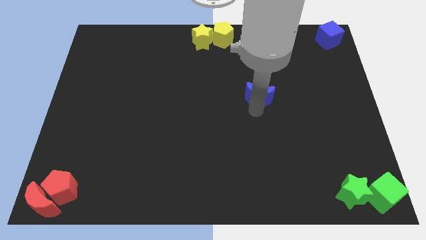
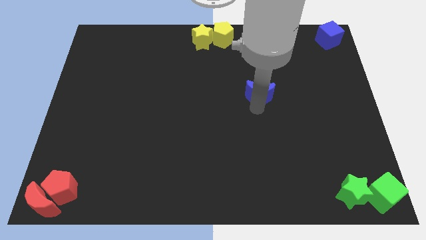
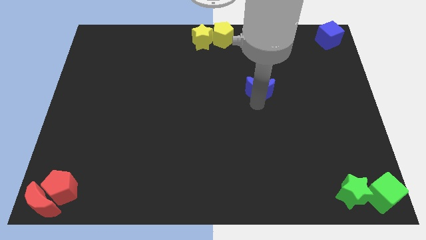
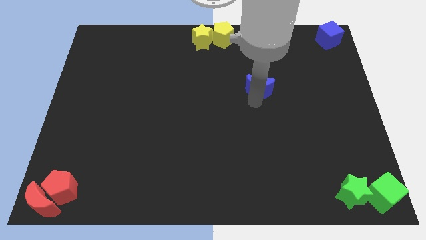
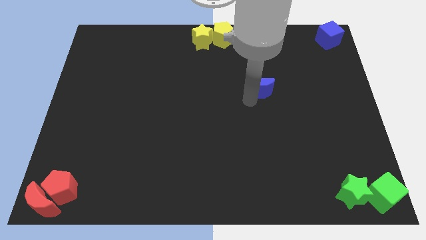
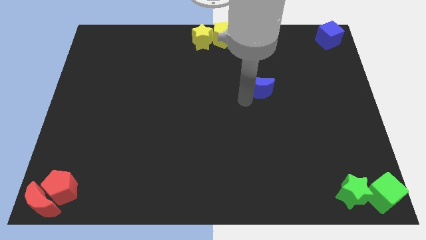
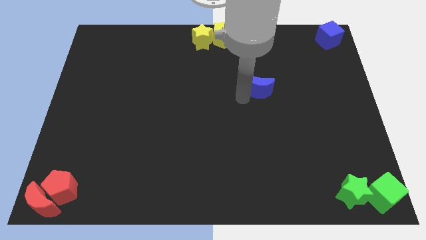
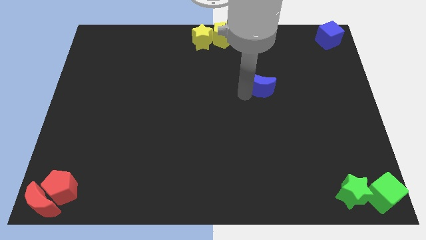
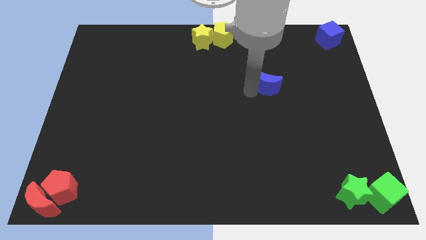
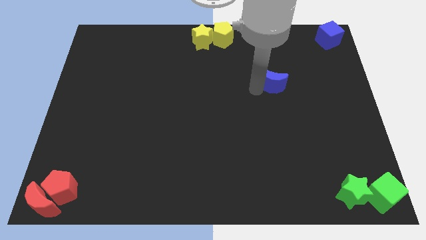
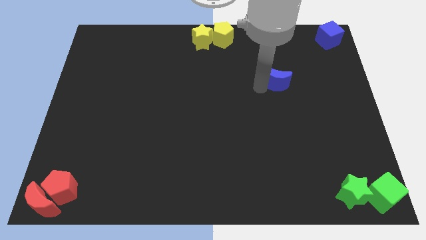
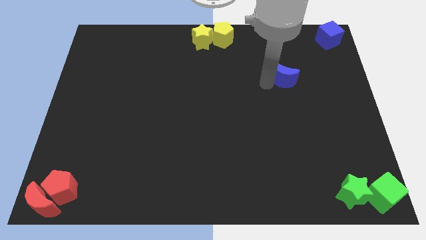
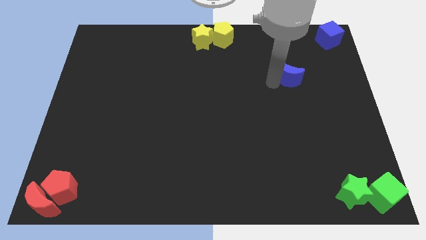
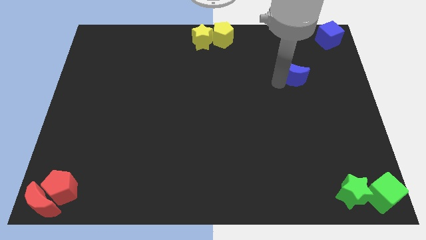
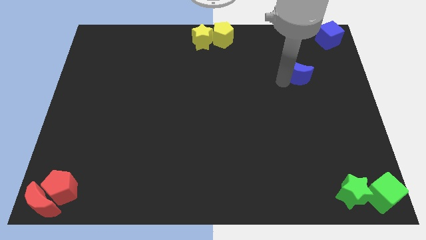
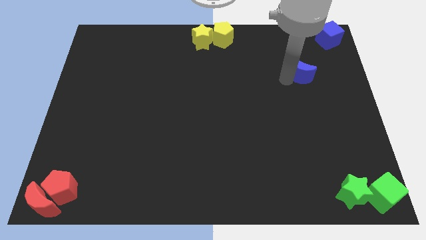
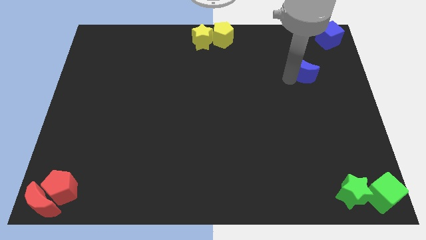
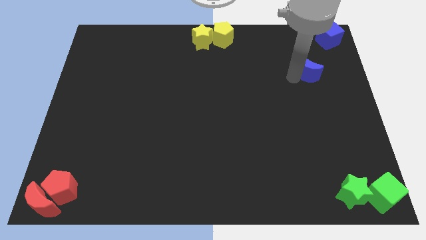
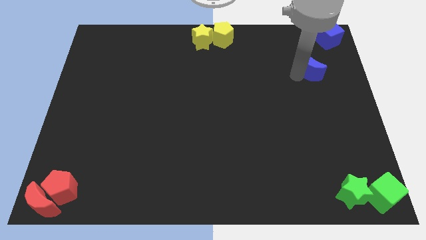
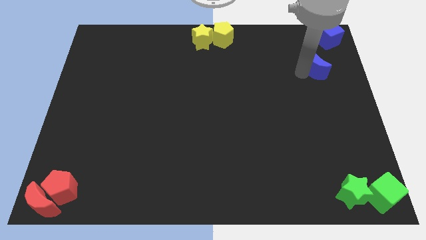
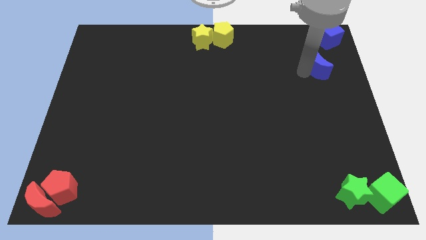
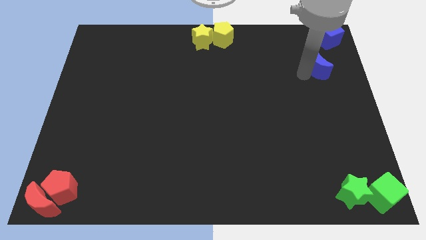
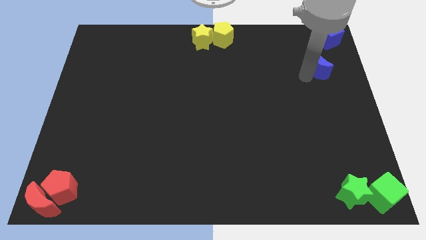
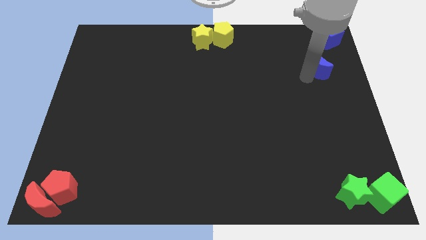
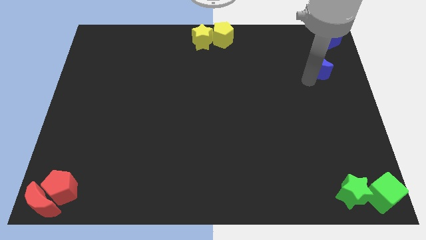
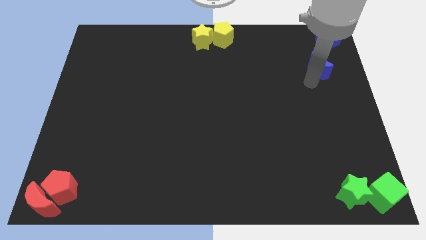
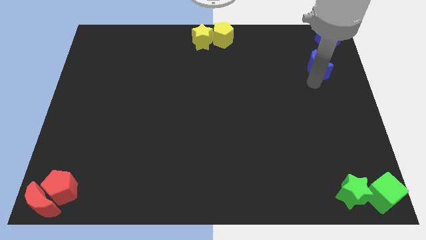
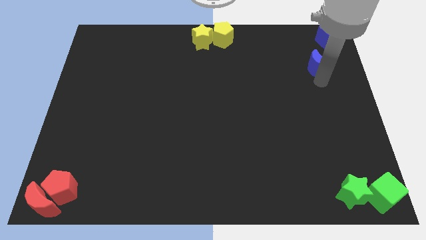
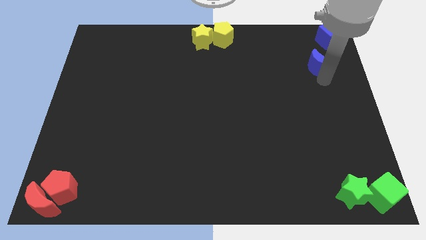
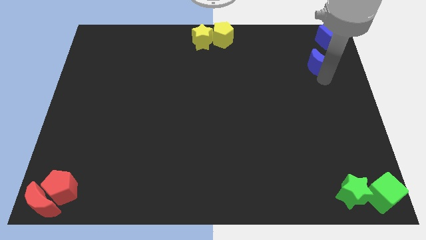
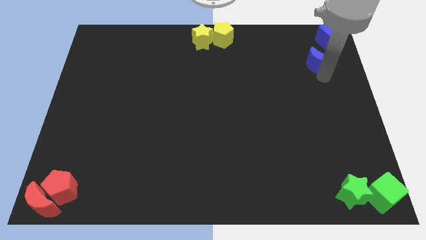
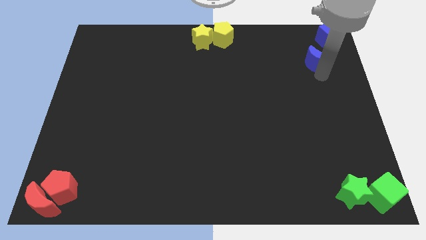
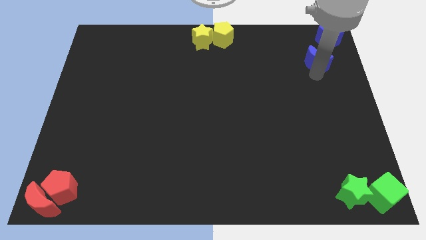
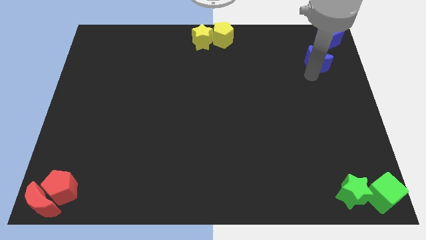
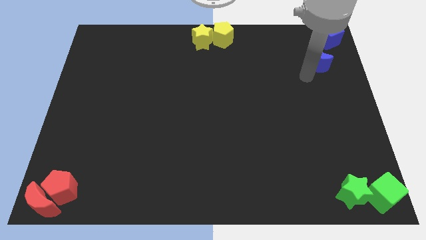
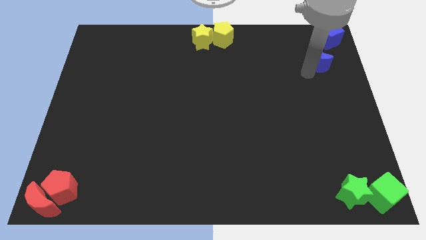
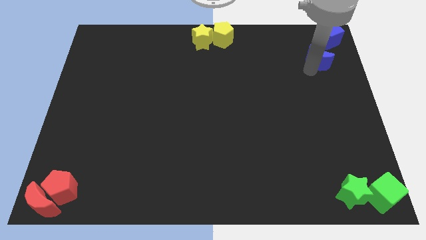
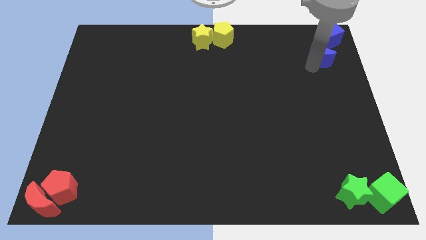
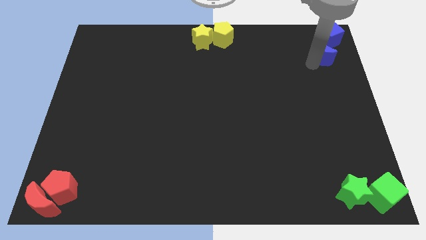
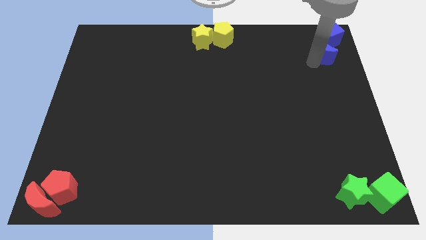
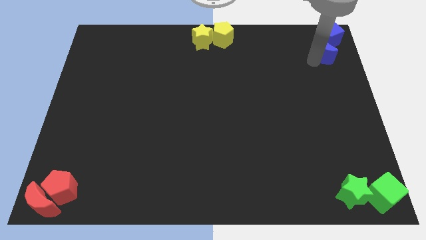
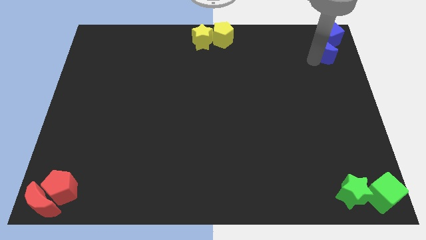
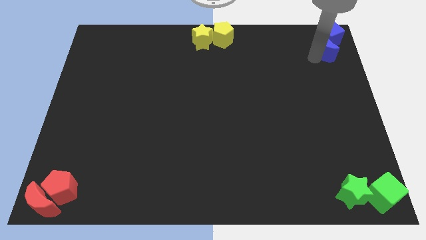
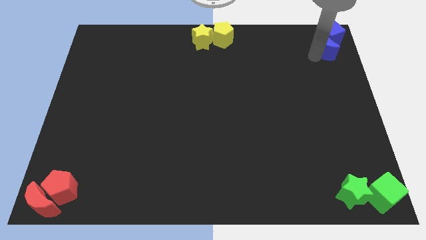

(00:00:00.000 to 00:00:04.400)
move the blue crescent to the bottom side of the blue cube

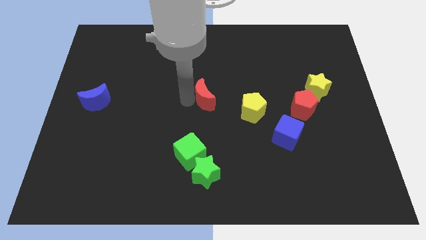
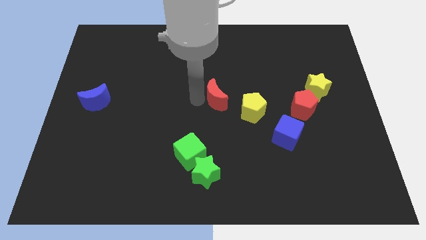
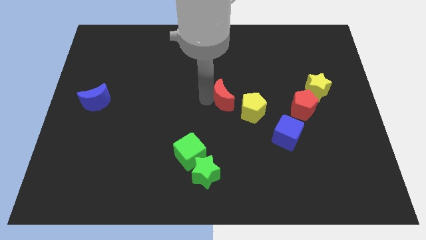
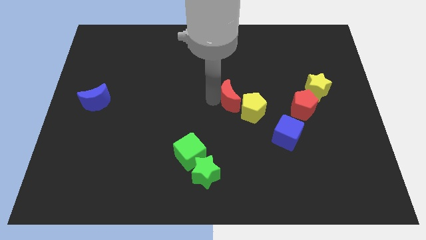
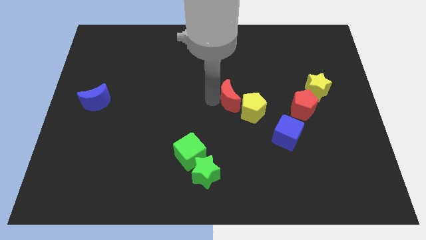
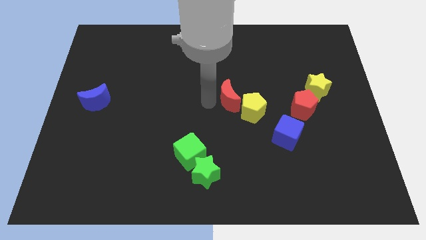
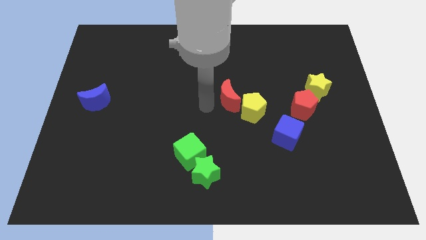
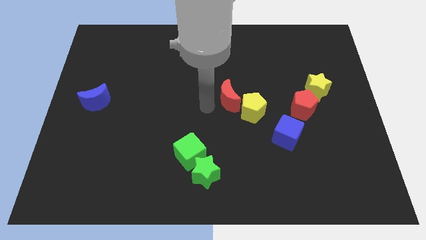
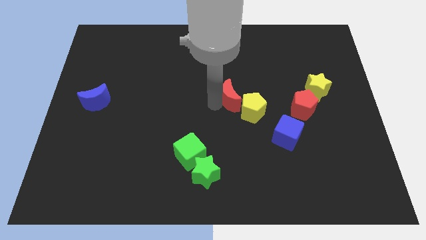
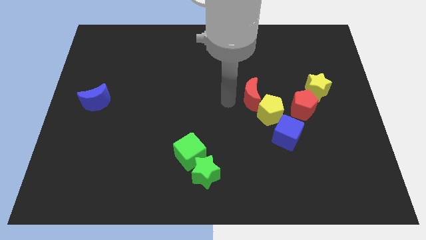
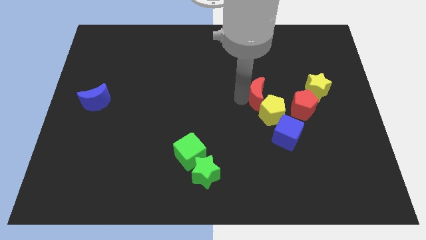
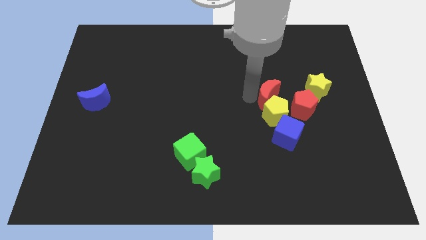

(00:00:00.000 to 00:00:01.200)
move red moon towards the yellow pentagon

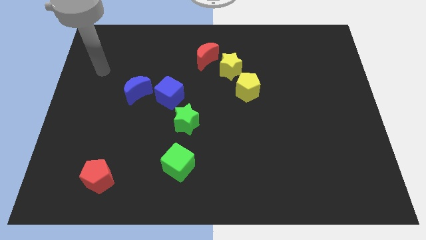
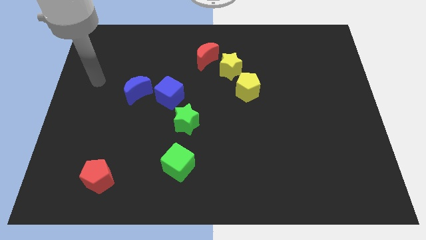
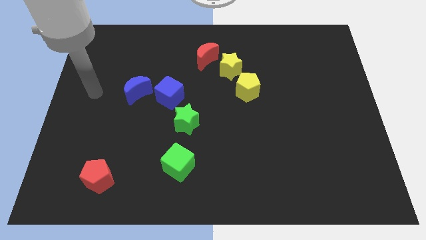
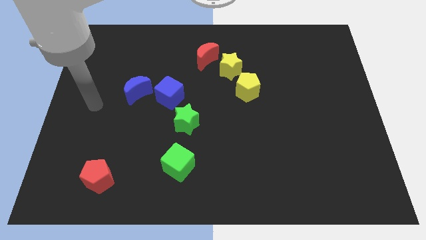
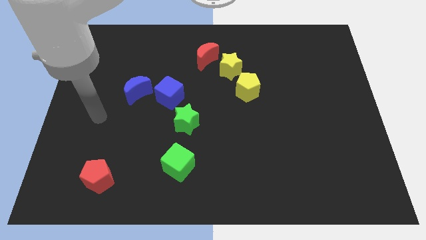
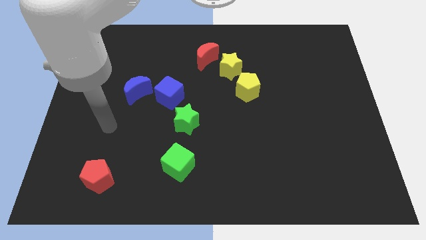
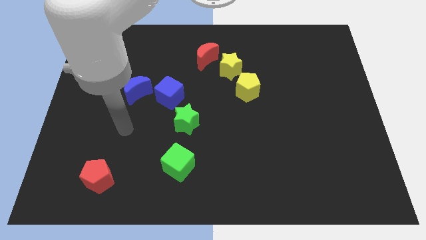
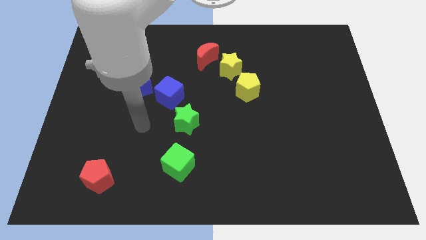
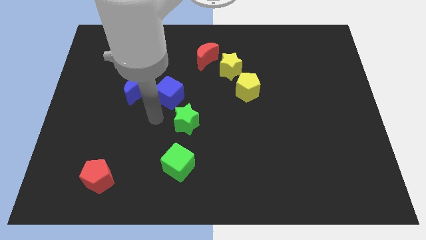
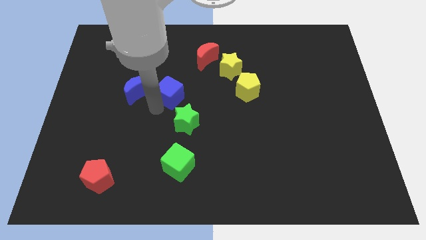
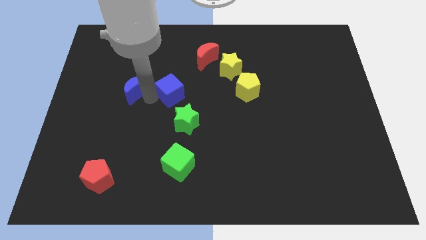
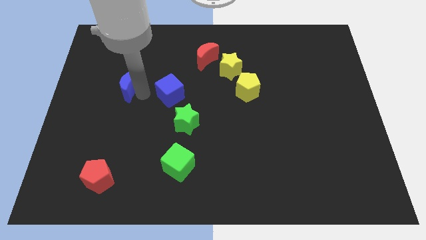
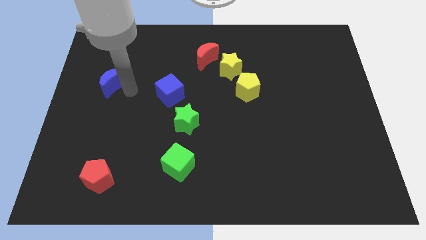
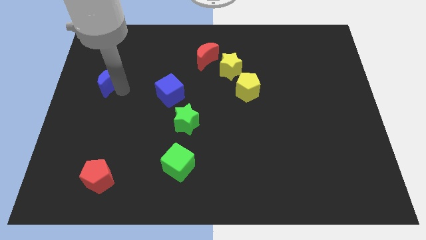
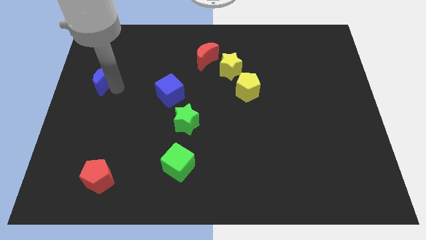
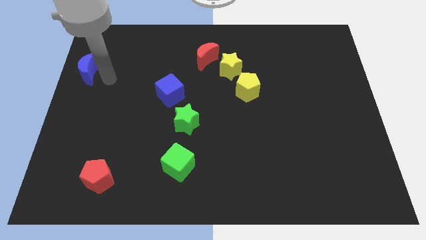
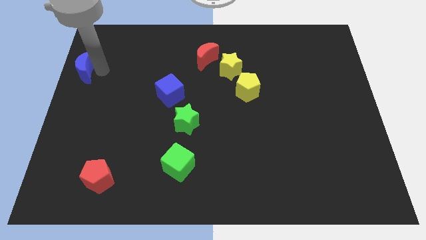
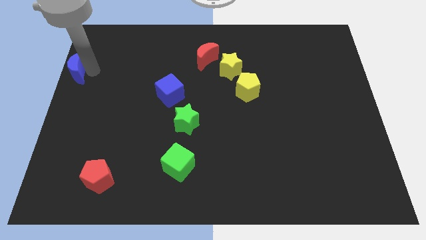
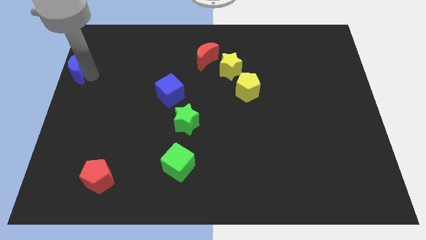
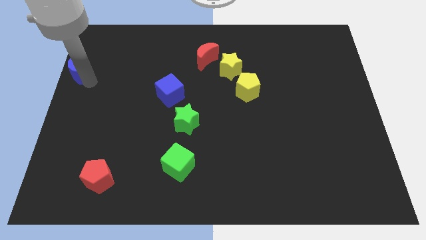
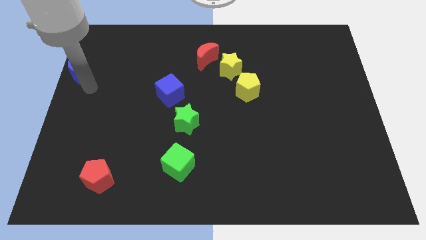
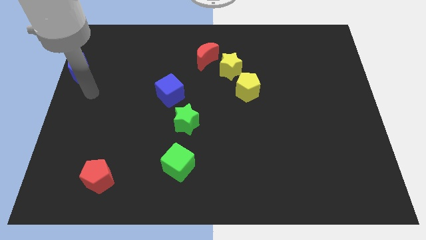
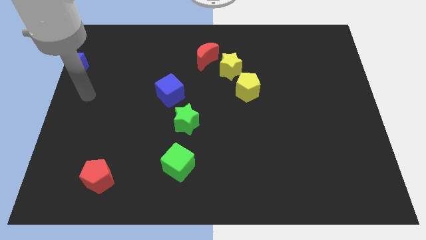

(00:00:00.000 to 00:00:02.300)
separate the blue crescent away from the blue cube

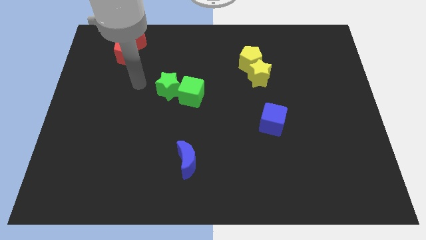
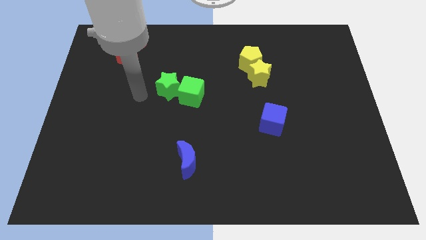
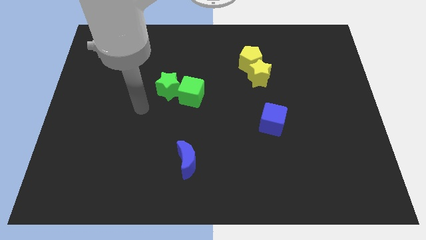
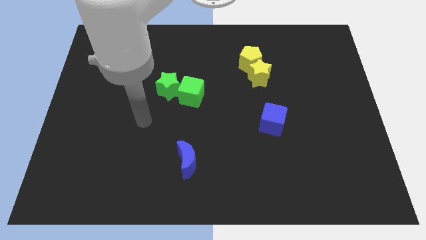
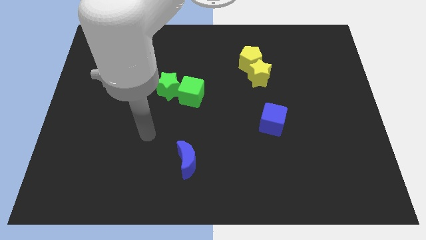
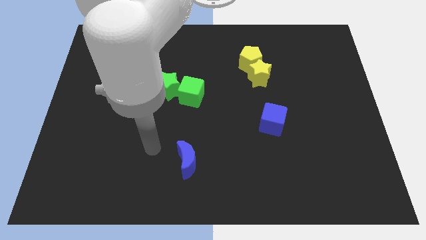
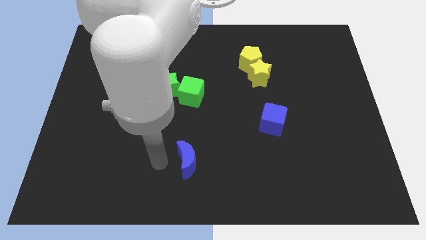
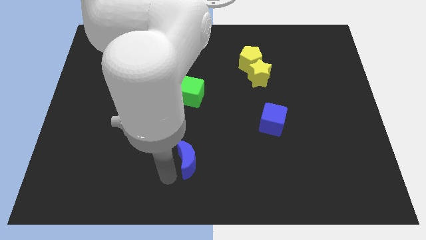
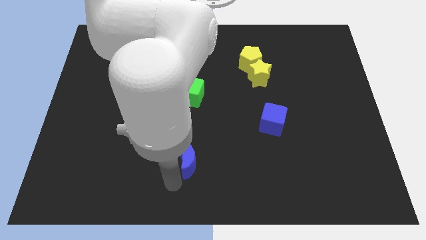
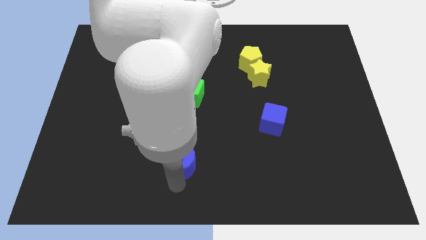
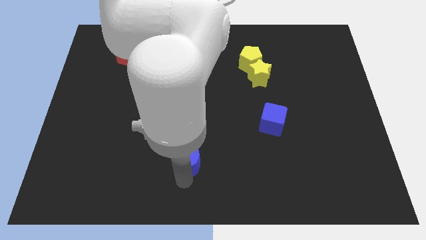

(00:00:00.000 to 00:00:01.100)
point your hand below the blue moon
